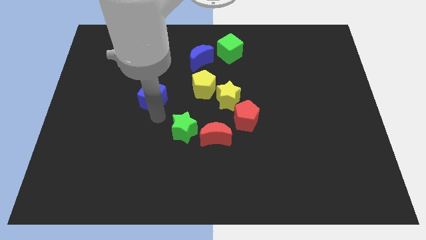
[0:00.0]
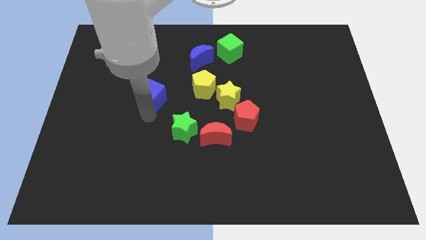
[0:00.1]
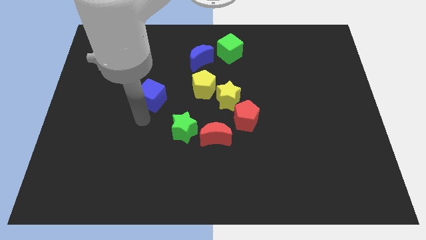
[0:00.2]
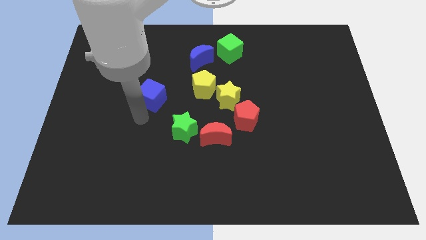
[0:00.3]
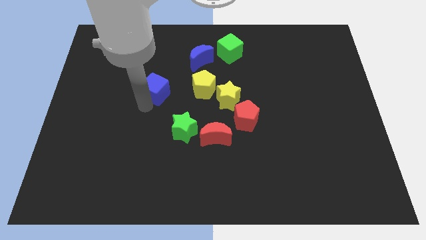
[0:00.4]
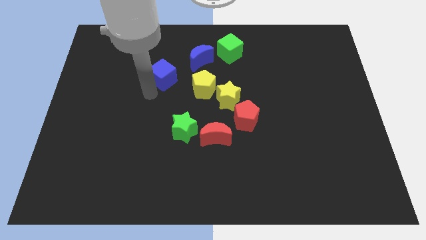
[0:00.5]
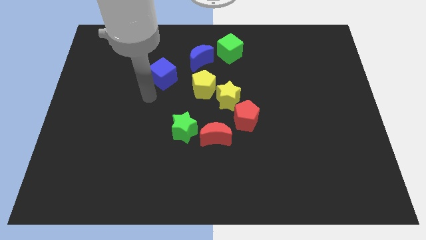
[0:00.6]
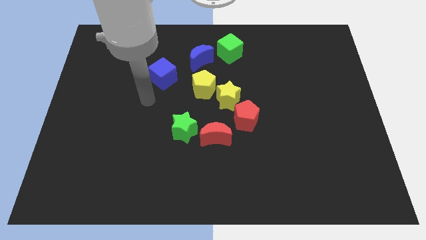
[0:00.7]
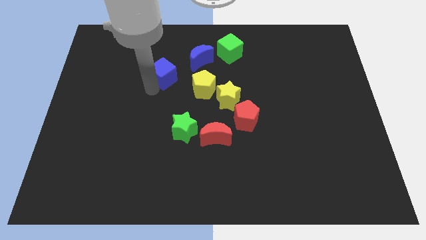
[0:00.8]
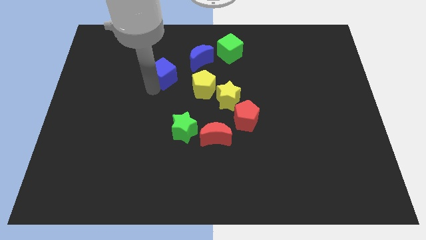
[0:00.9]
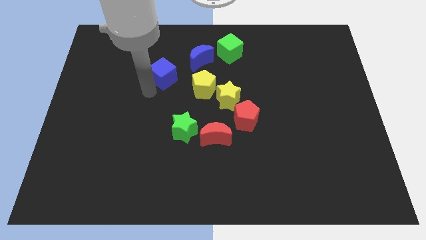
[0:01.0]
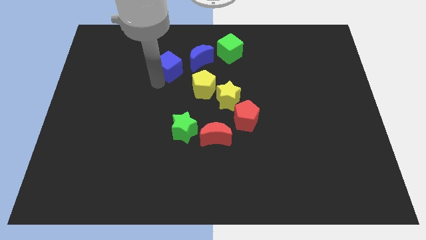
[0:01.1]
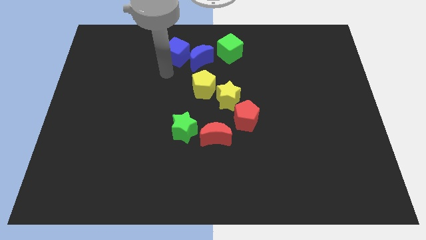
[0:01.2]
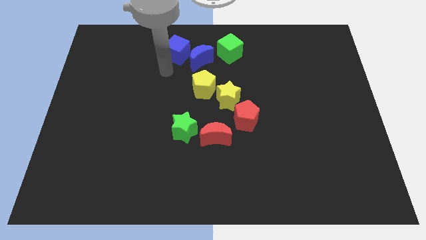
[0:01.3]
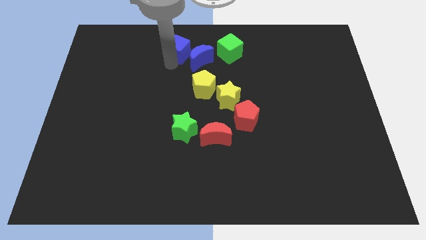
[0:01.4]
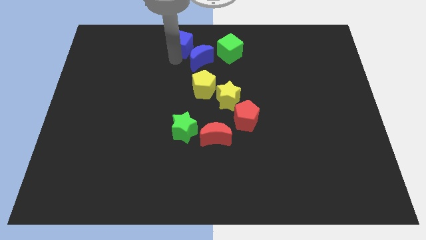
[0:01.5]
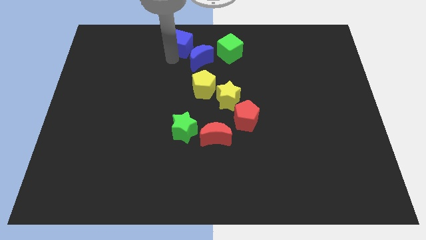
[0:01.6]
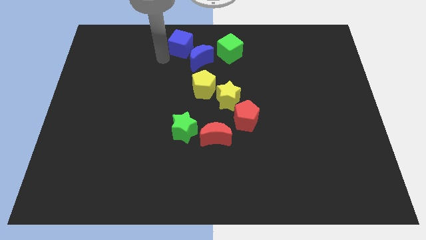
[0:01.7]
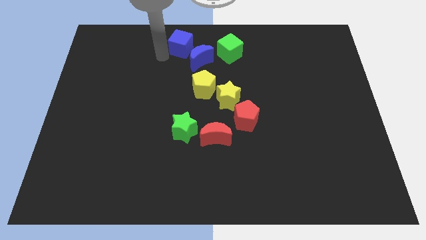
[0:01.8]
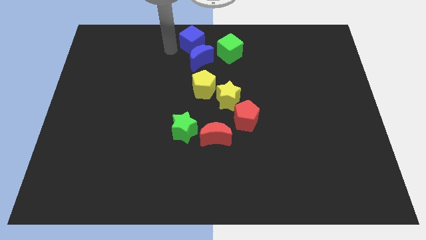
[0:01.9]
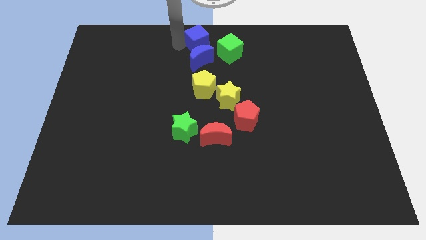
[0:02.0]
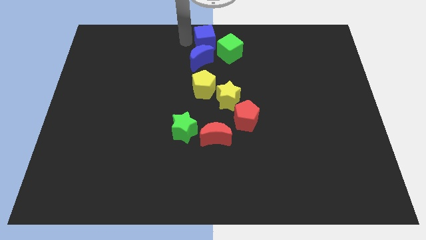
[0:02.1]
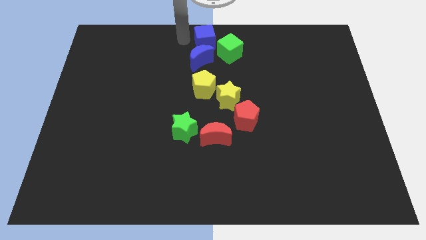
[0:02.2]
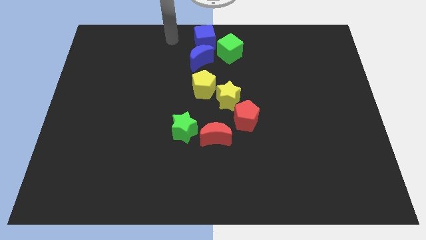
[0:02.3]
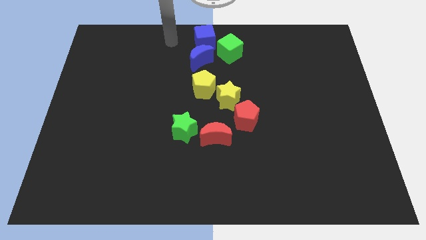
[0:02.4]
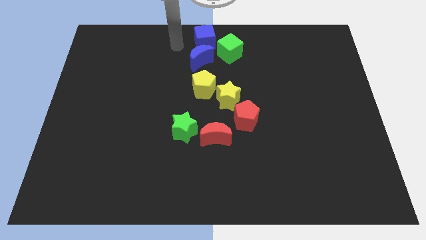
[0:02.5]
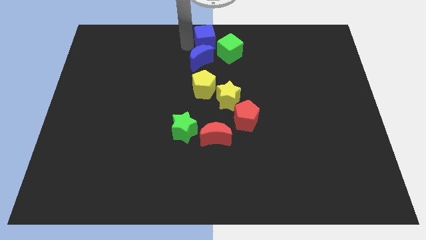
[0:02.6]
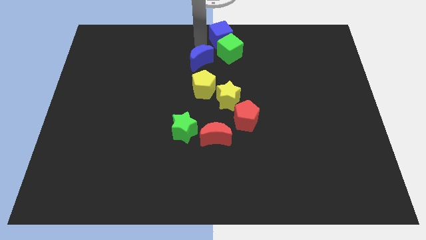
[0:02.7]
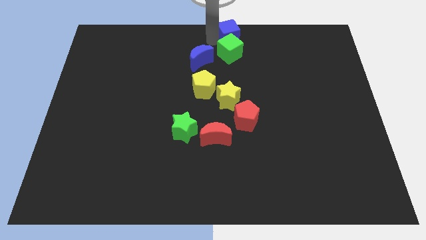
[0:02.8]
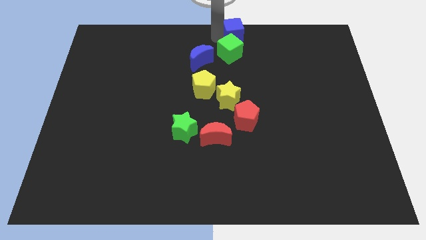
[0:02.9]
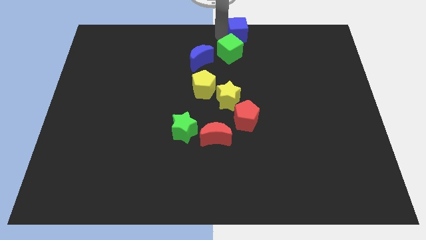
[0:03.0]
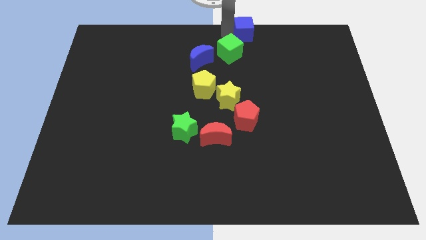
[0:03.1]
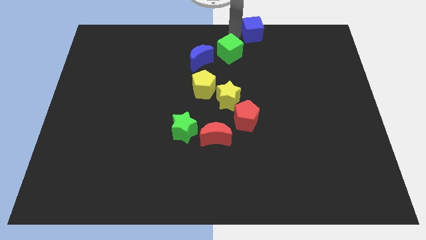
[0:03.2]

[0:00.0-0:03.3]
move the blue cube to the top center of the board

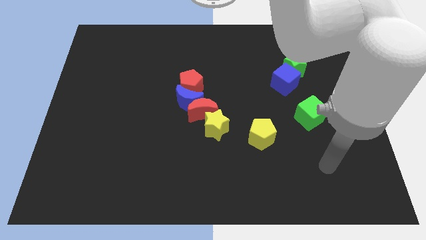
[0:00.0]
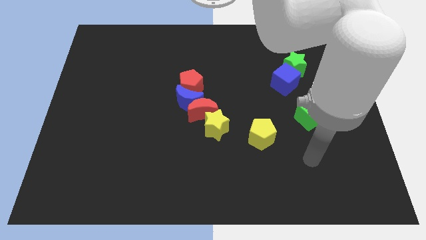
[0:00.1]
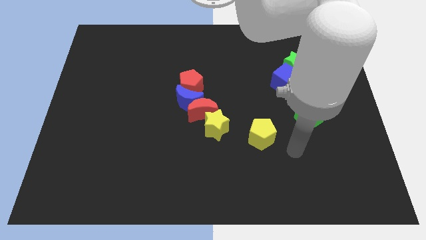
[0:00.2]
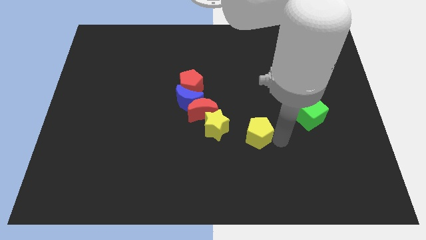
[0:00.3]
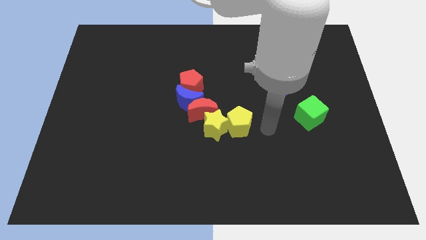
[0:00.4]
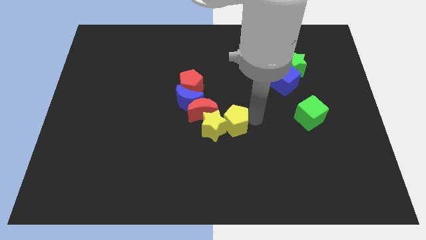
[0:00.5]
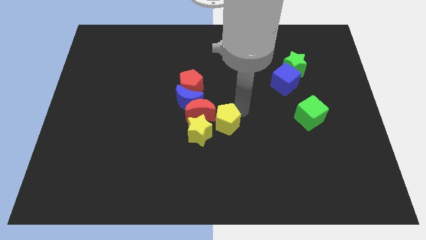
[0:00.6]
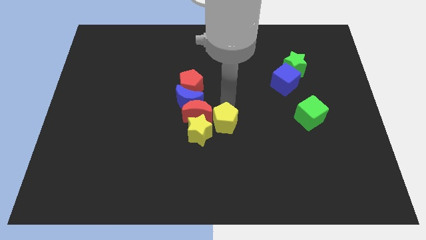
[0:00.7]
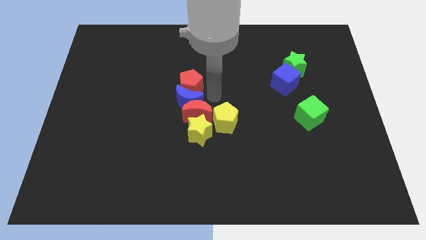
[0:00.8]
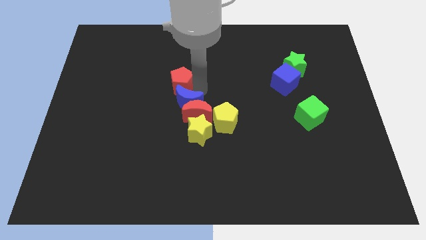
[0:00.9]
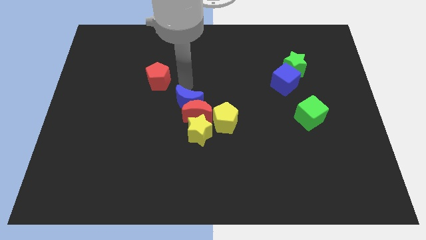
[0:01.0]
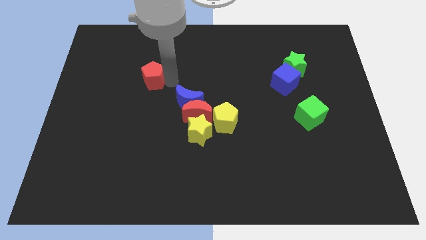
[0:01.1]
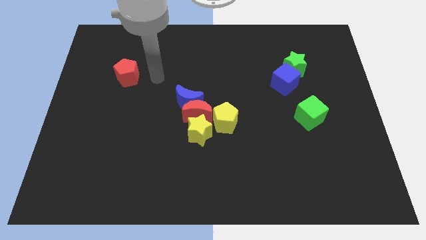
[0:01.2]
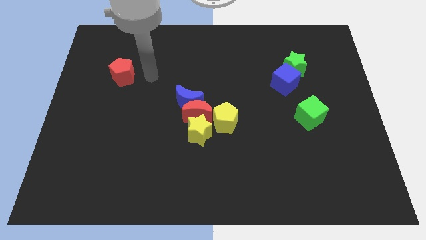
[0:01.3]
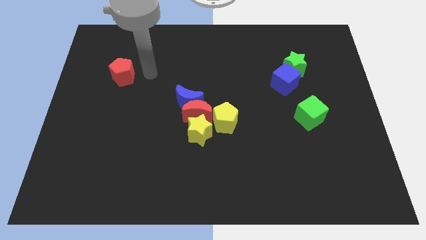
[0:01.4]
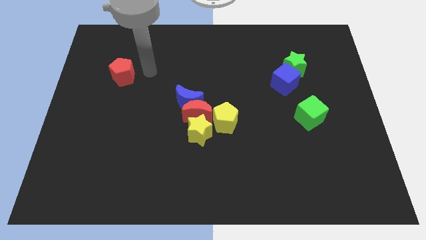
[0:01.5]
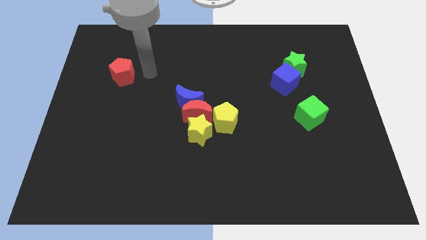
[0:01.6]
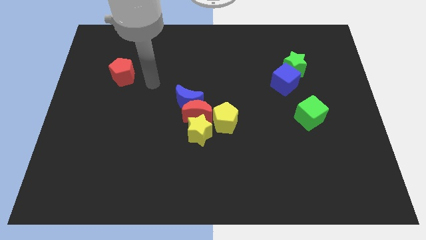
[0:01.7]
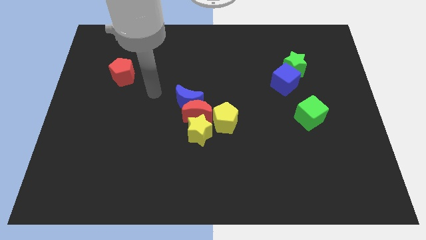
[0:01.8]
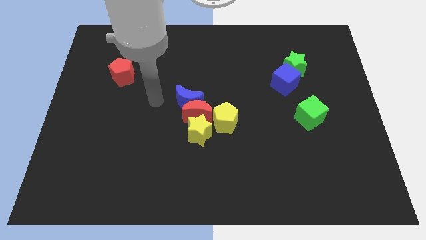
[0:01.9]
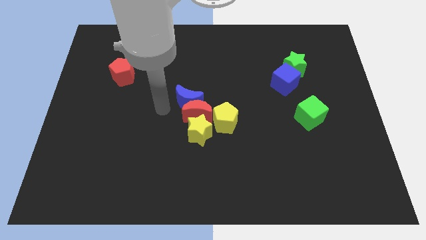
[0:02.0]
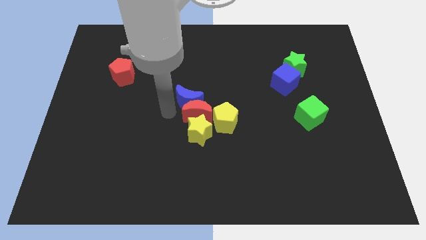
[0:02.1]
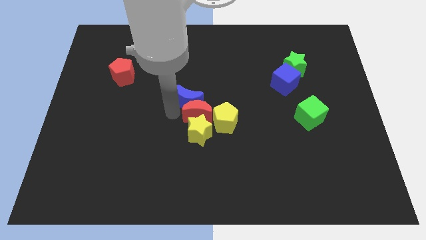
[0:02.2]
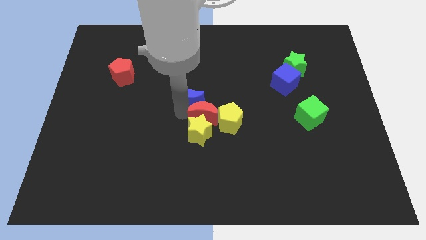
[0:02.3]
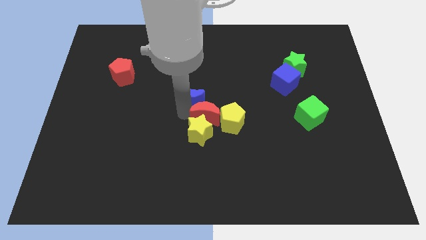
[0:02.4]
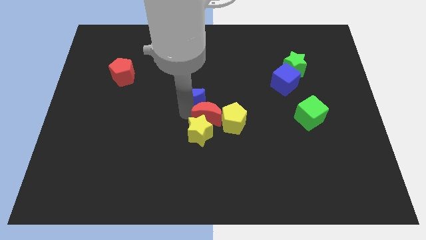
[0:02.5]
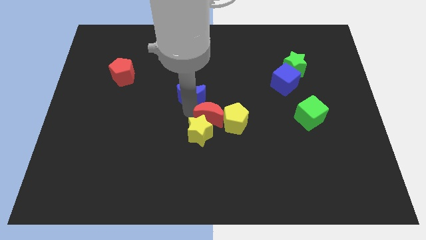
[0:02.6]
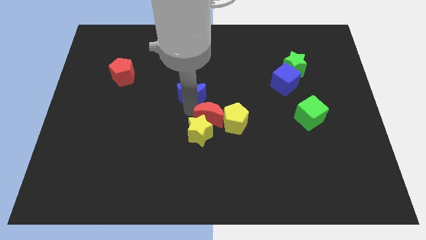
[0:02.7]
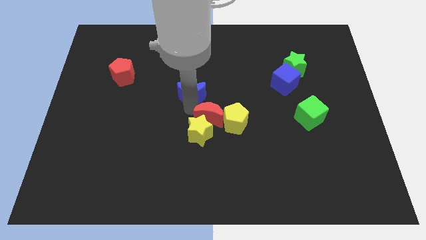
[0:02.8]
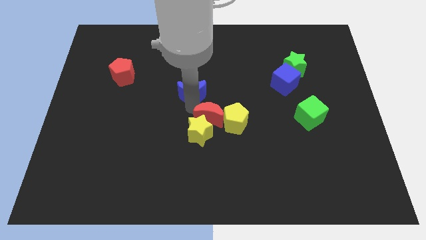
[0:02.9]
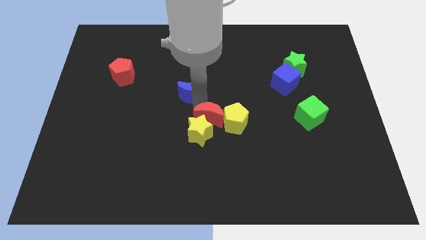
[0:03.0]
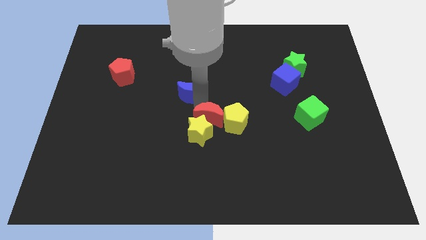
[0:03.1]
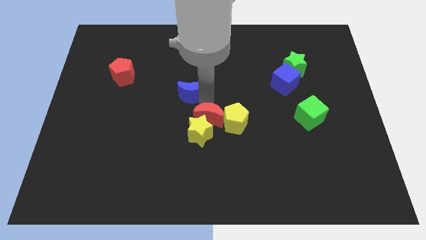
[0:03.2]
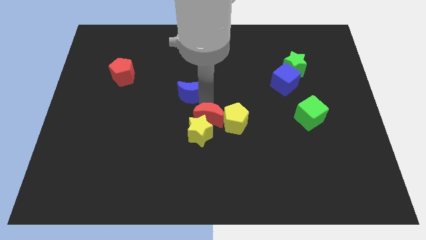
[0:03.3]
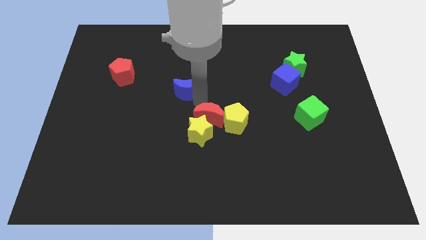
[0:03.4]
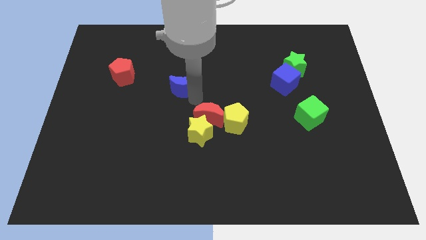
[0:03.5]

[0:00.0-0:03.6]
move the group of yellow blocks and red crescent diagonal to the blue crescent and red pentagon

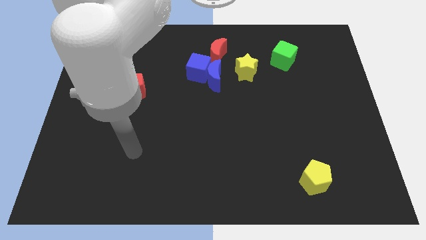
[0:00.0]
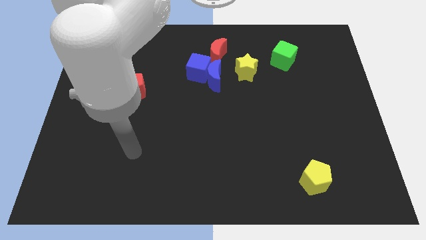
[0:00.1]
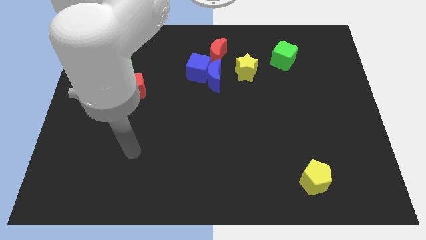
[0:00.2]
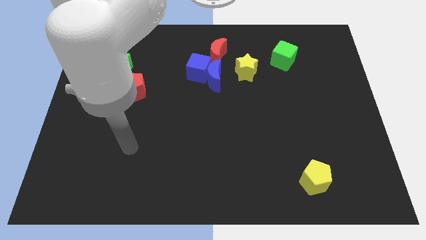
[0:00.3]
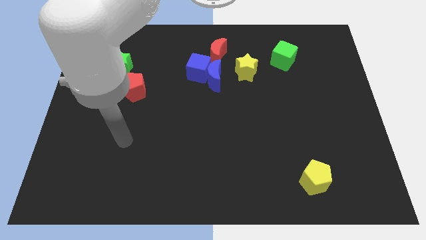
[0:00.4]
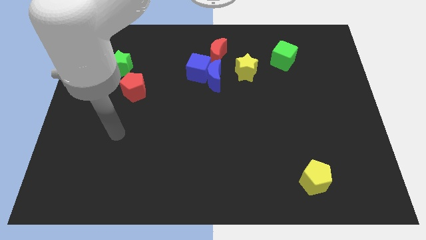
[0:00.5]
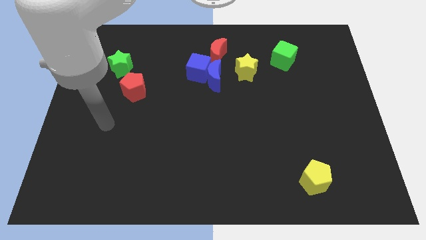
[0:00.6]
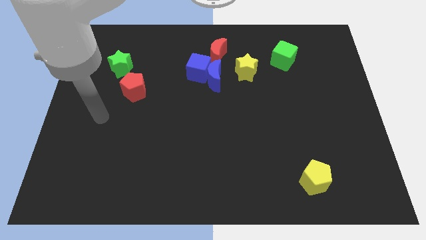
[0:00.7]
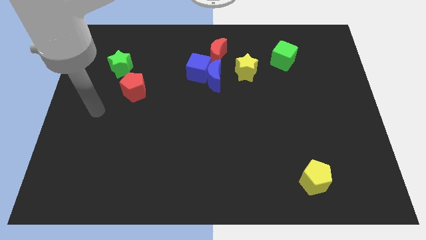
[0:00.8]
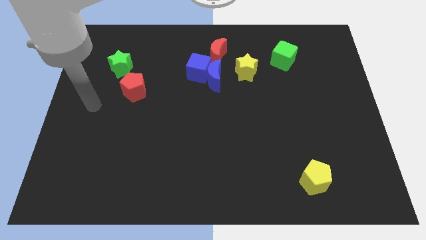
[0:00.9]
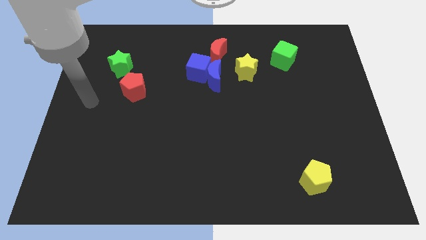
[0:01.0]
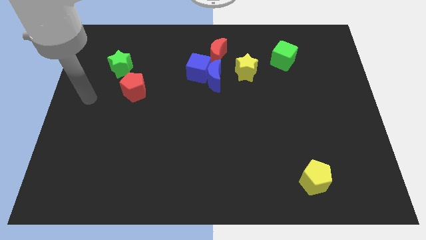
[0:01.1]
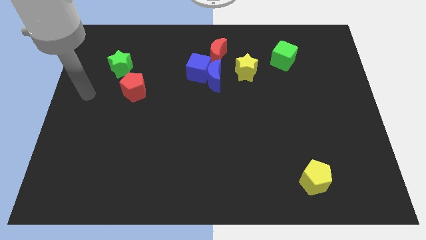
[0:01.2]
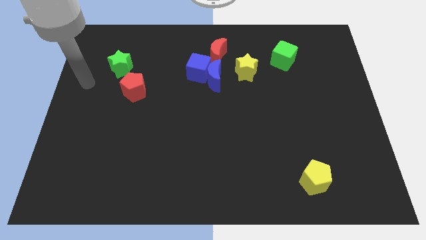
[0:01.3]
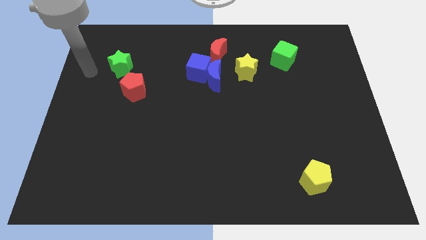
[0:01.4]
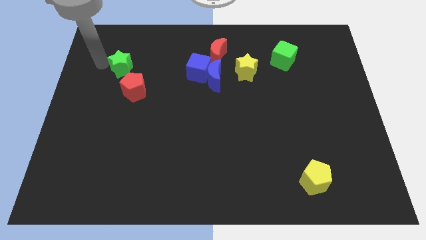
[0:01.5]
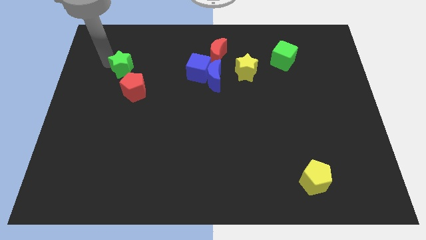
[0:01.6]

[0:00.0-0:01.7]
place your arm to the top left of green star

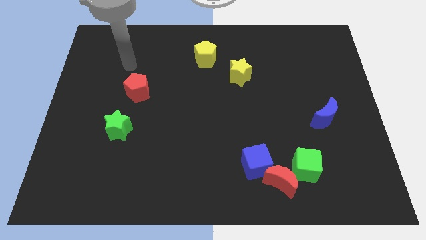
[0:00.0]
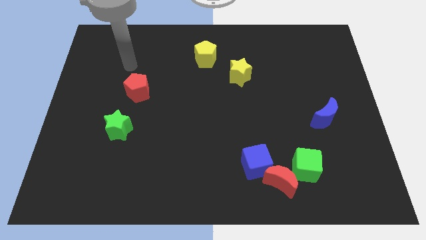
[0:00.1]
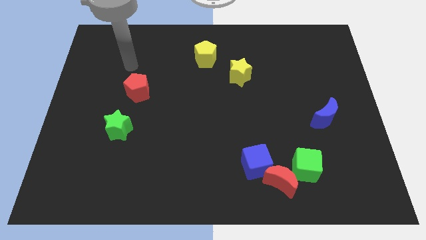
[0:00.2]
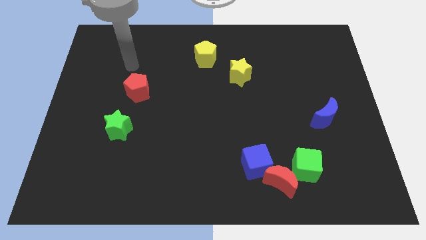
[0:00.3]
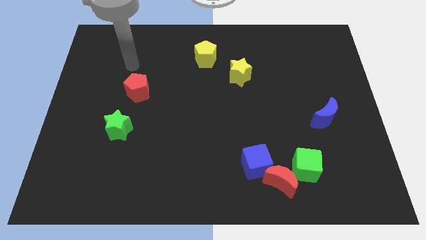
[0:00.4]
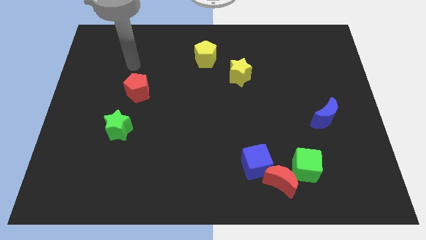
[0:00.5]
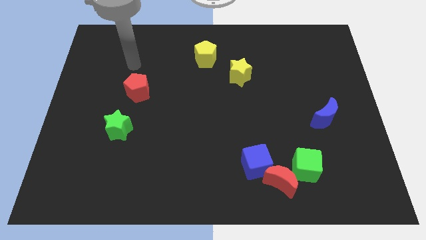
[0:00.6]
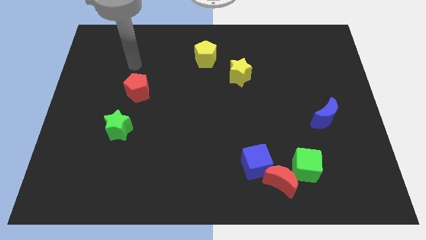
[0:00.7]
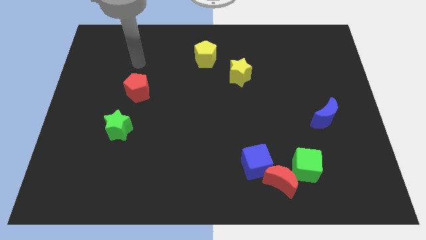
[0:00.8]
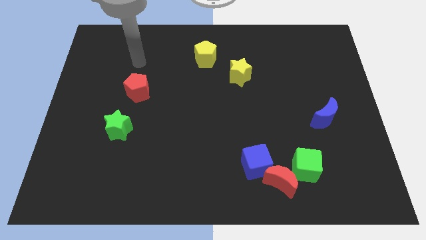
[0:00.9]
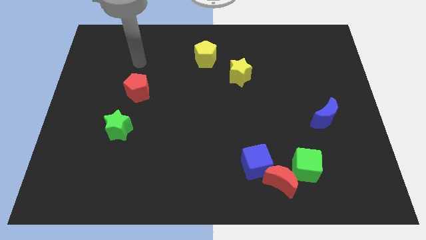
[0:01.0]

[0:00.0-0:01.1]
slightly push the arm towards the center of the board
